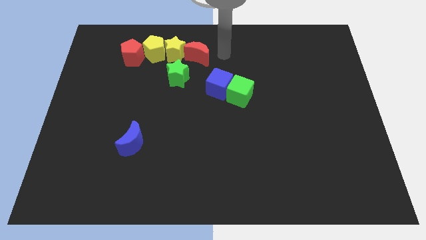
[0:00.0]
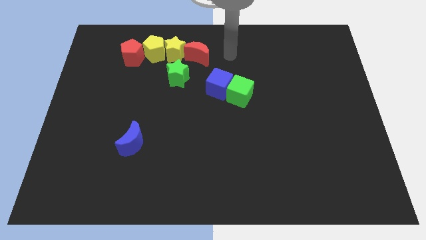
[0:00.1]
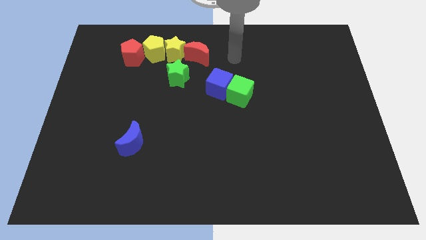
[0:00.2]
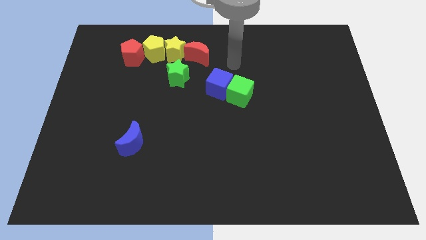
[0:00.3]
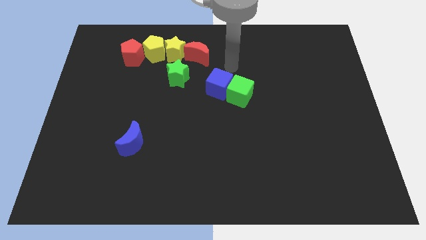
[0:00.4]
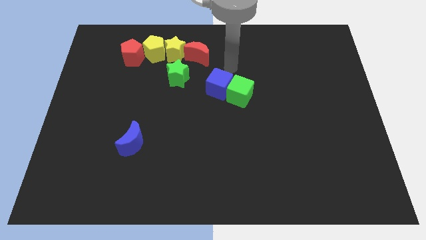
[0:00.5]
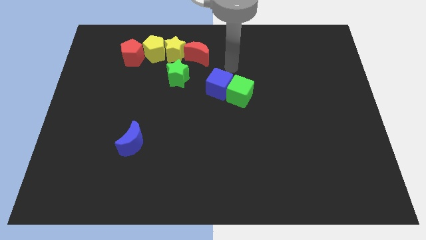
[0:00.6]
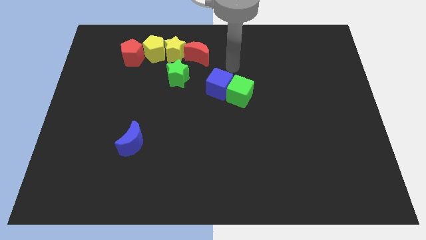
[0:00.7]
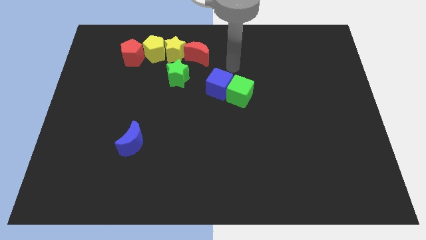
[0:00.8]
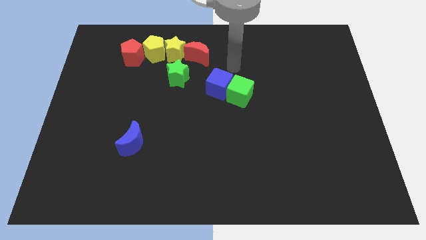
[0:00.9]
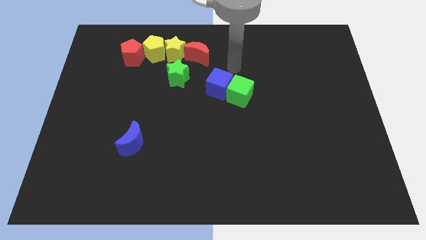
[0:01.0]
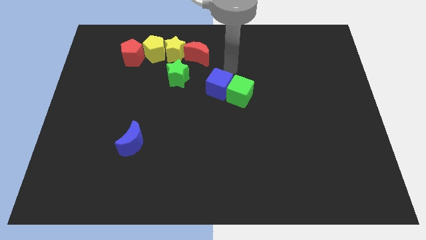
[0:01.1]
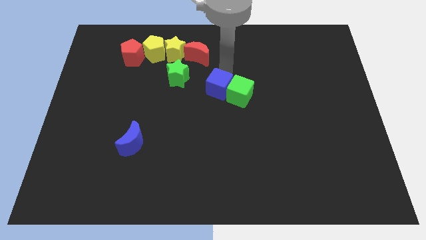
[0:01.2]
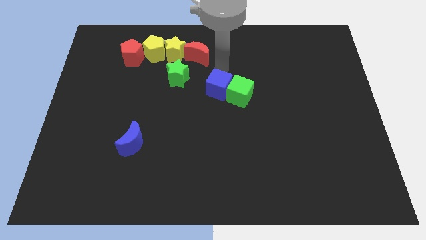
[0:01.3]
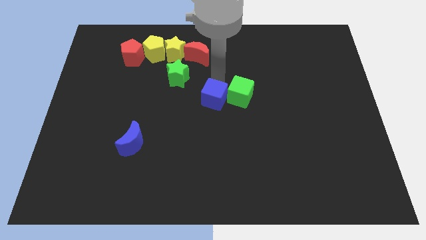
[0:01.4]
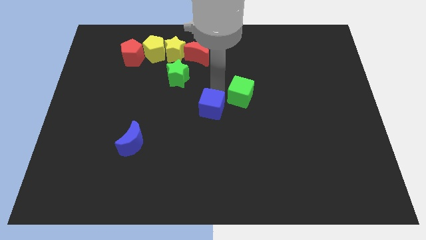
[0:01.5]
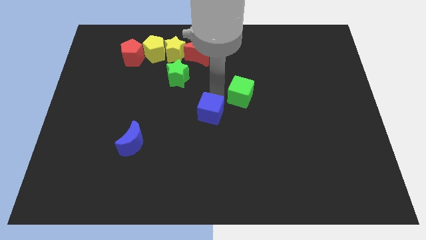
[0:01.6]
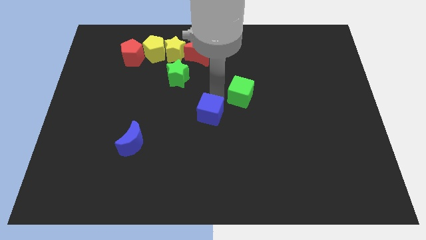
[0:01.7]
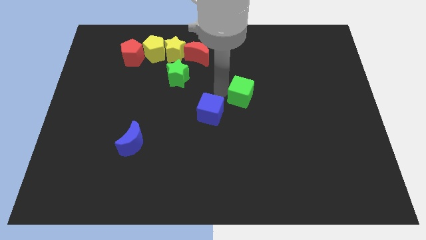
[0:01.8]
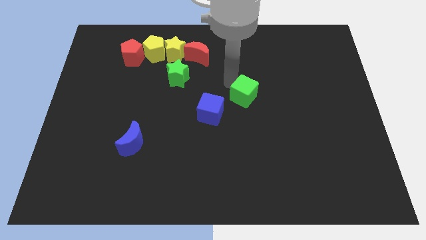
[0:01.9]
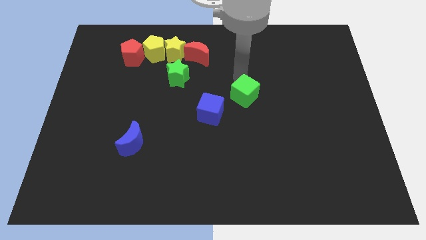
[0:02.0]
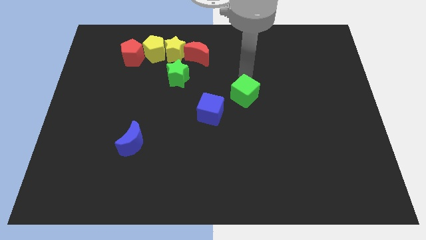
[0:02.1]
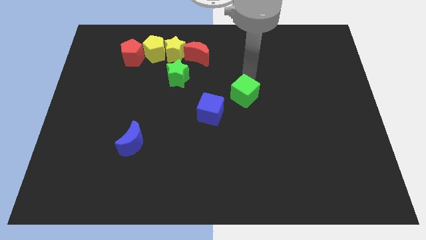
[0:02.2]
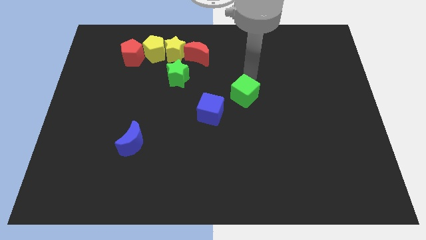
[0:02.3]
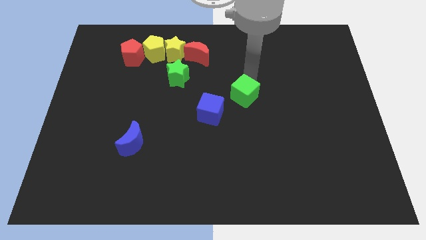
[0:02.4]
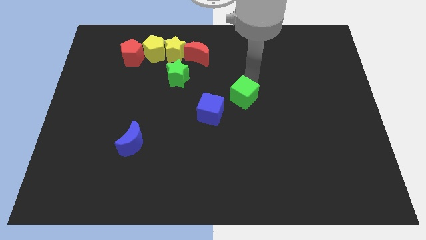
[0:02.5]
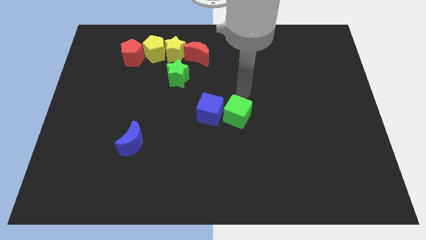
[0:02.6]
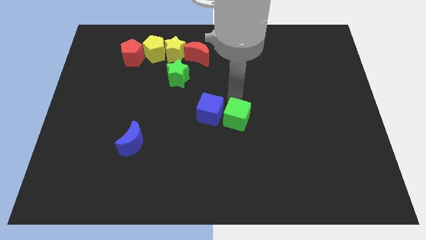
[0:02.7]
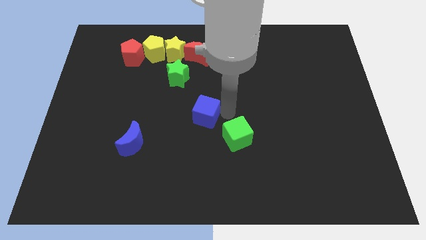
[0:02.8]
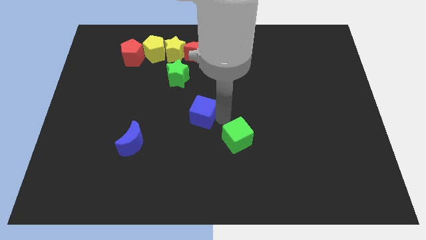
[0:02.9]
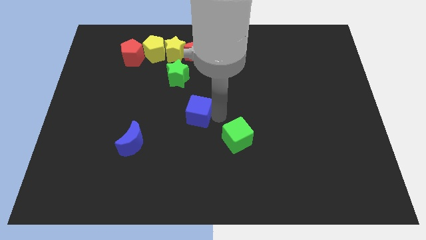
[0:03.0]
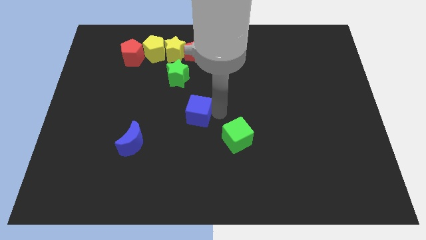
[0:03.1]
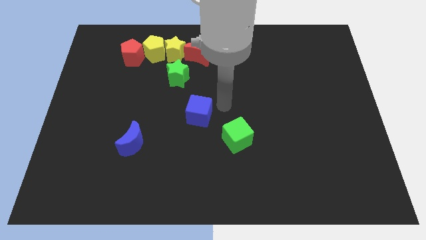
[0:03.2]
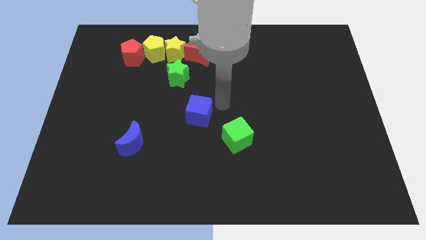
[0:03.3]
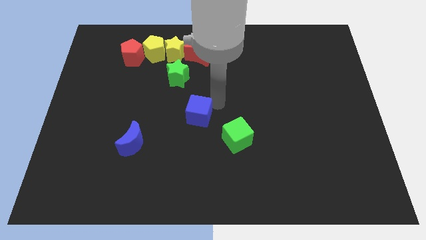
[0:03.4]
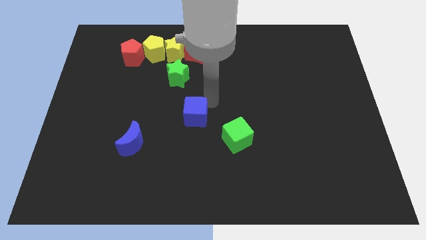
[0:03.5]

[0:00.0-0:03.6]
separate the green cube and blue cube at the center side

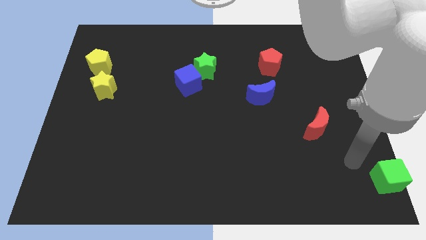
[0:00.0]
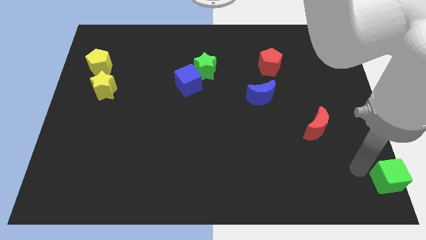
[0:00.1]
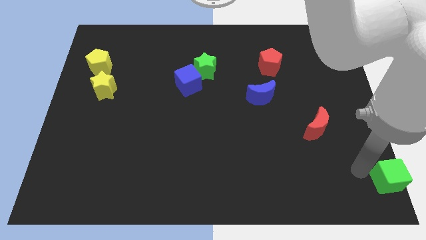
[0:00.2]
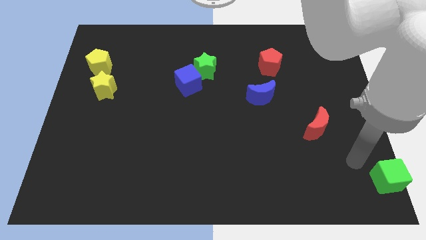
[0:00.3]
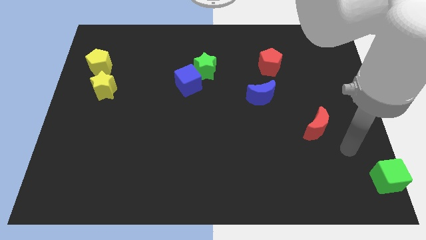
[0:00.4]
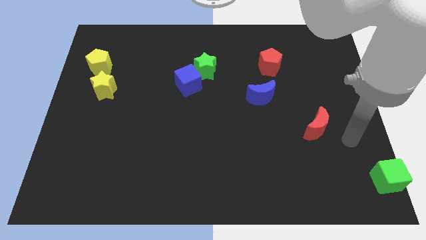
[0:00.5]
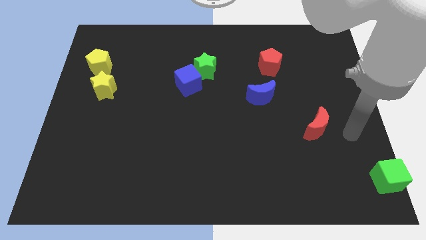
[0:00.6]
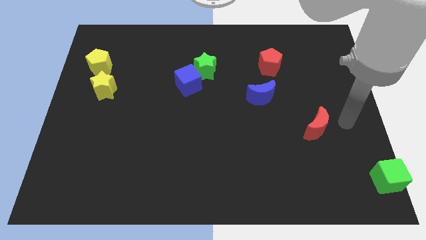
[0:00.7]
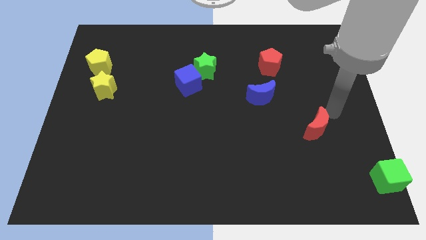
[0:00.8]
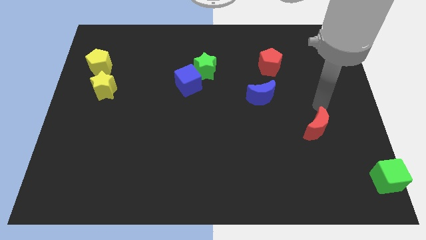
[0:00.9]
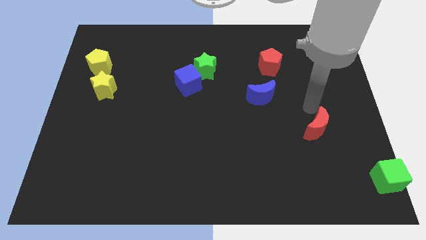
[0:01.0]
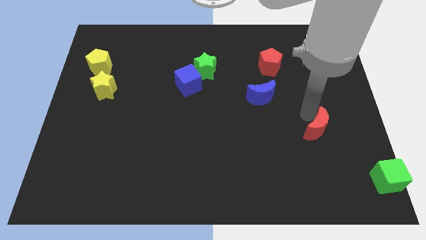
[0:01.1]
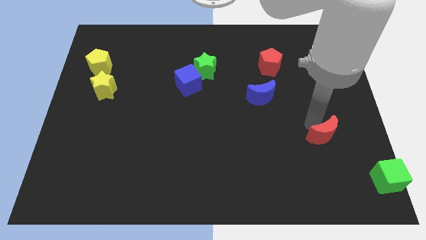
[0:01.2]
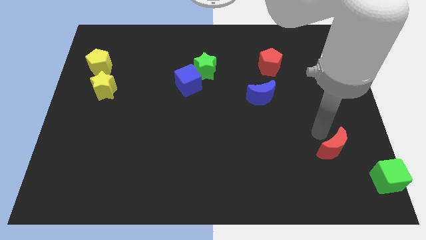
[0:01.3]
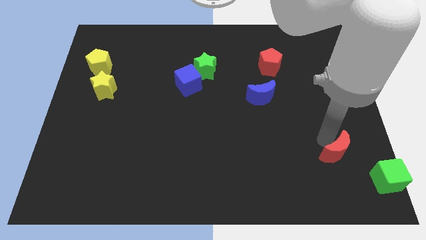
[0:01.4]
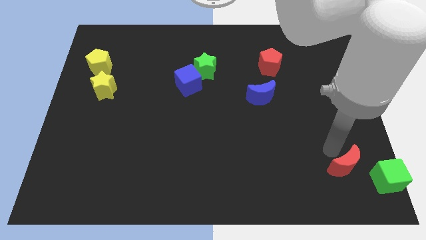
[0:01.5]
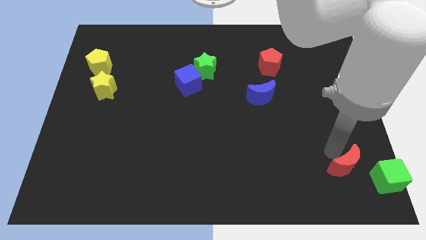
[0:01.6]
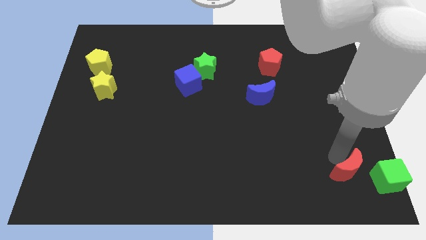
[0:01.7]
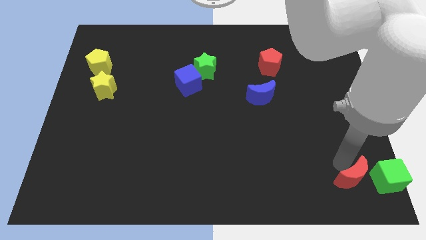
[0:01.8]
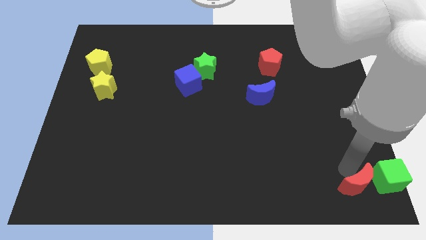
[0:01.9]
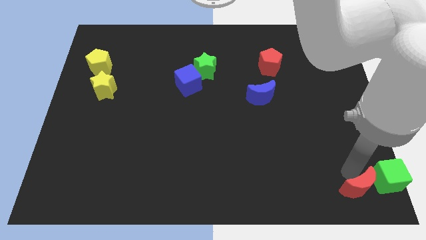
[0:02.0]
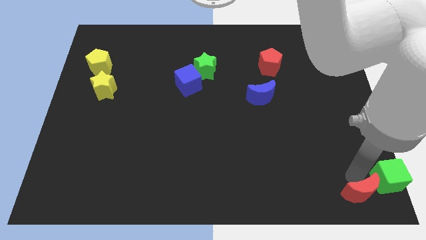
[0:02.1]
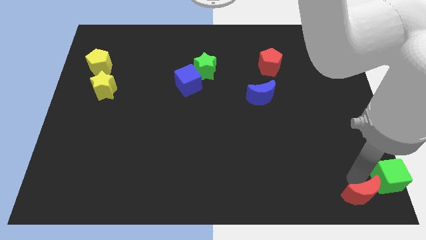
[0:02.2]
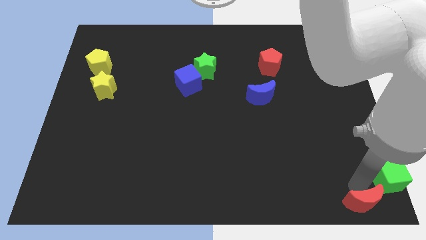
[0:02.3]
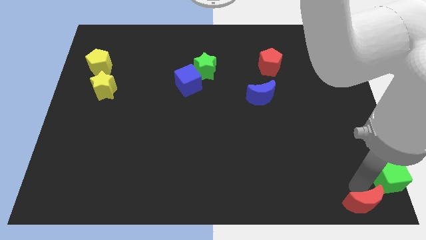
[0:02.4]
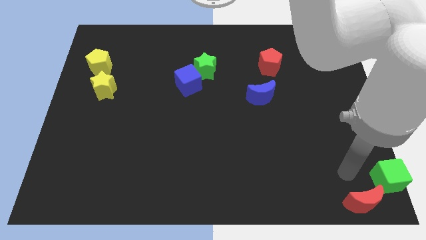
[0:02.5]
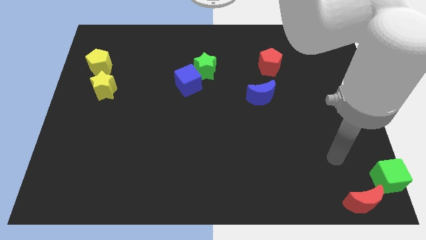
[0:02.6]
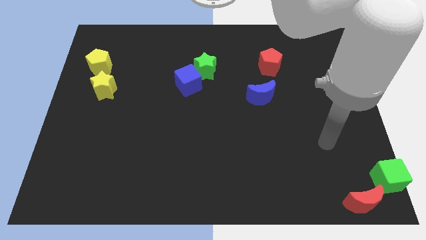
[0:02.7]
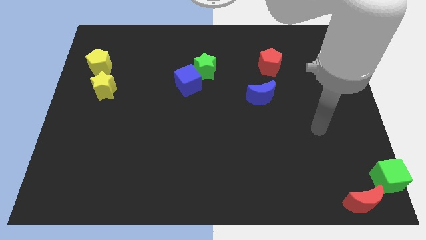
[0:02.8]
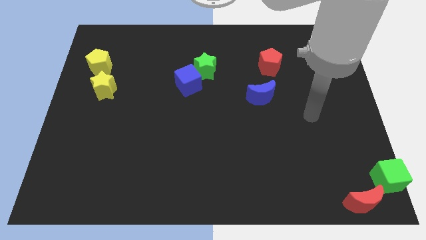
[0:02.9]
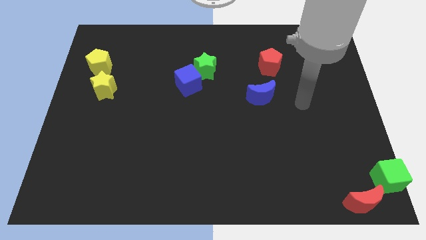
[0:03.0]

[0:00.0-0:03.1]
push the red crescent towards the bottom right of the board

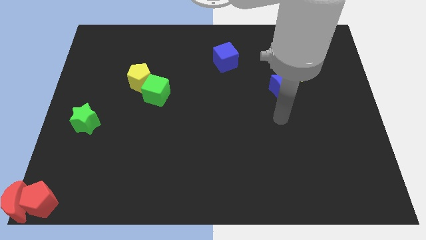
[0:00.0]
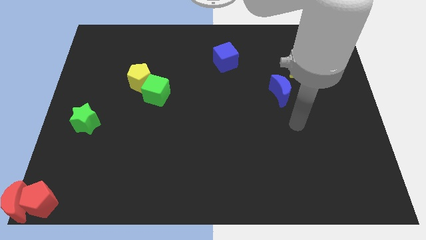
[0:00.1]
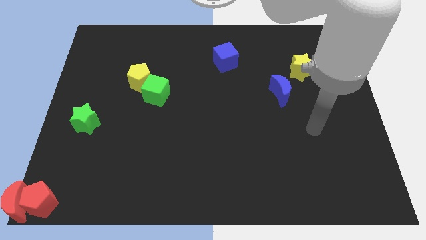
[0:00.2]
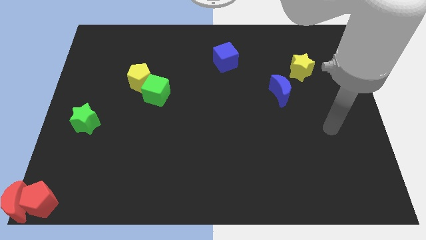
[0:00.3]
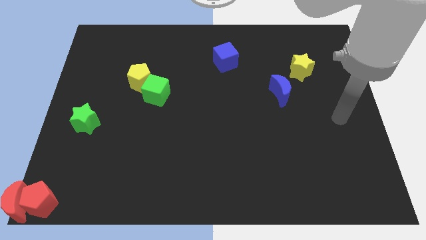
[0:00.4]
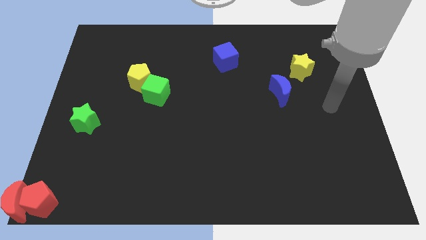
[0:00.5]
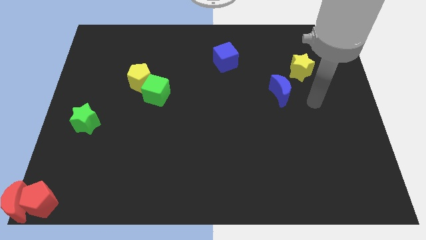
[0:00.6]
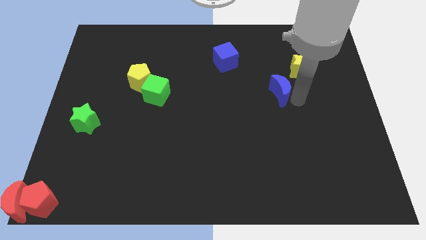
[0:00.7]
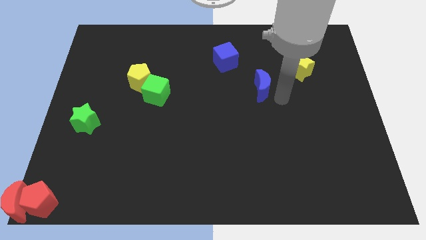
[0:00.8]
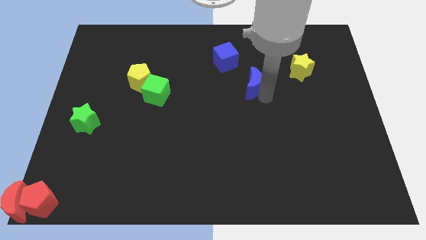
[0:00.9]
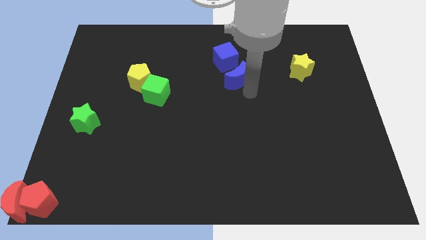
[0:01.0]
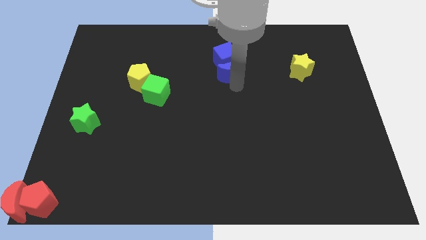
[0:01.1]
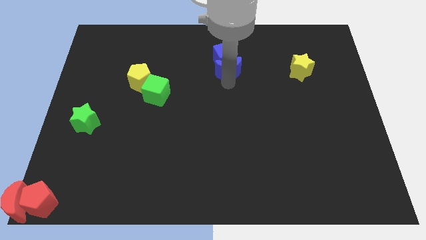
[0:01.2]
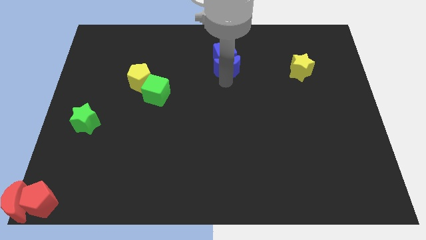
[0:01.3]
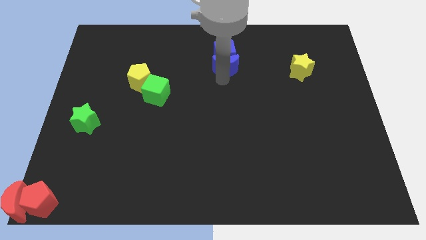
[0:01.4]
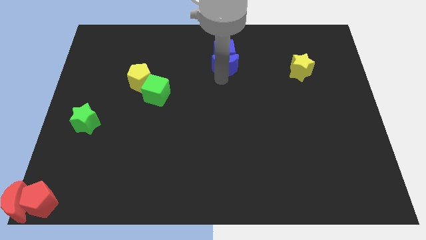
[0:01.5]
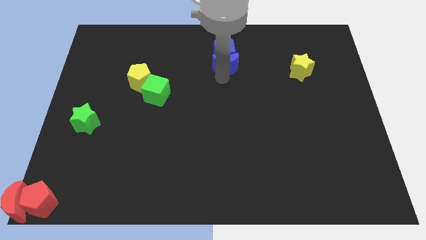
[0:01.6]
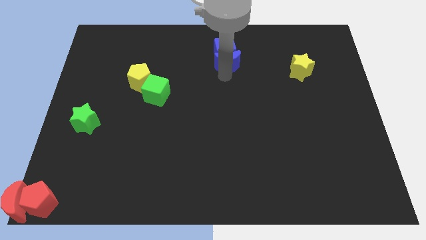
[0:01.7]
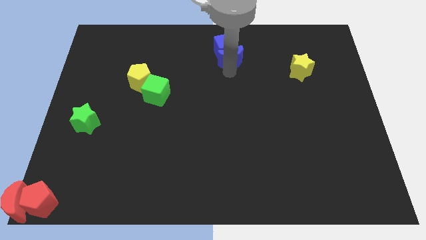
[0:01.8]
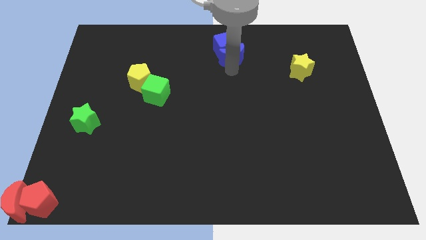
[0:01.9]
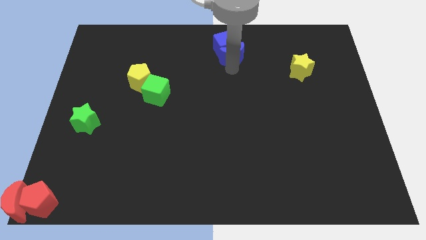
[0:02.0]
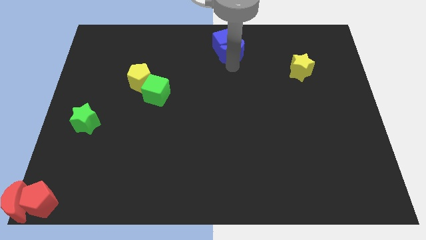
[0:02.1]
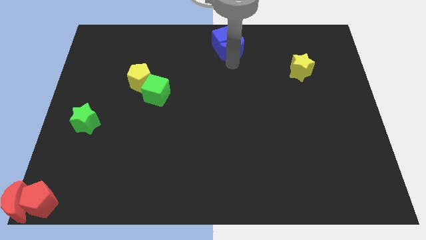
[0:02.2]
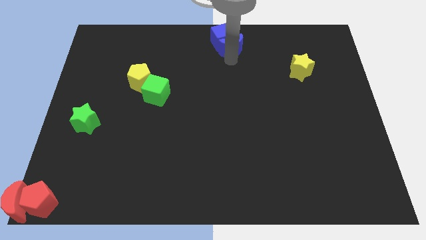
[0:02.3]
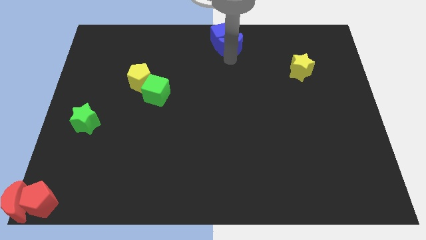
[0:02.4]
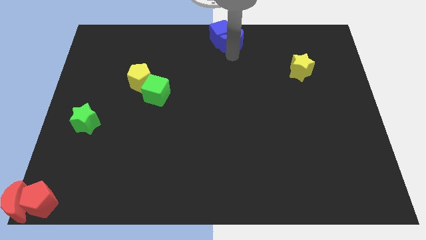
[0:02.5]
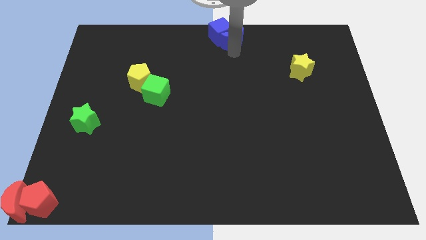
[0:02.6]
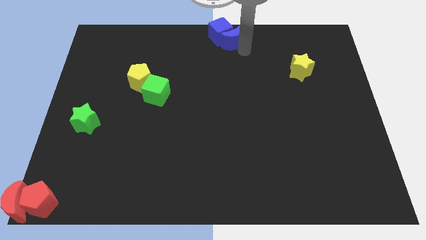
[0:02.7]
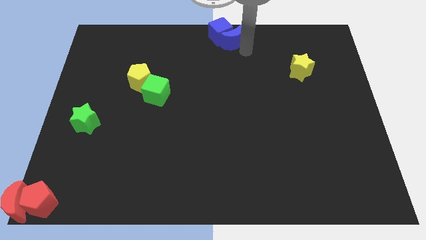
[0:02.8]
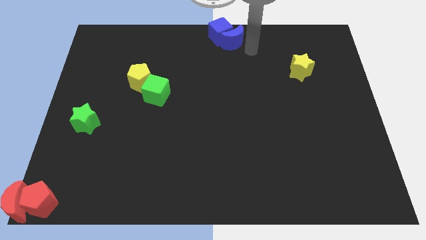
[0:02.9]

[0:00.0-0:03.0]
move the blue moon with blue cube towards top center
